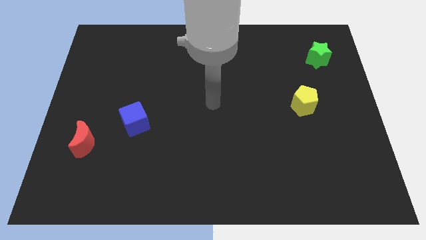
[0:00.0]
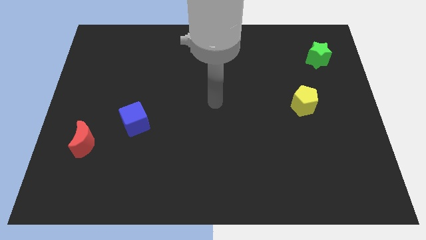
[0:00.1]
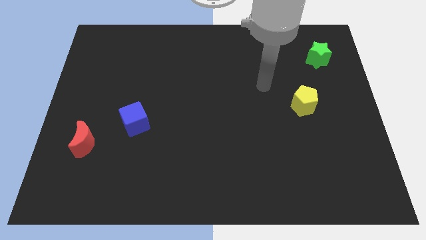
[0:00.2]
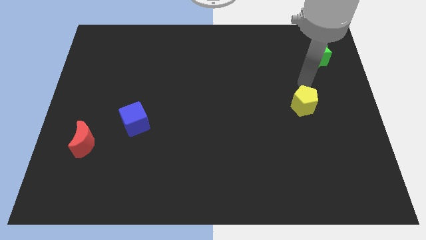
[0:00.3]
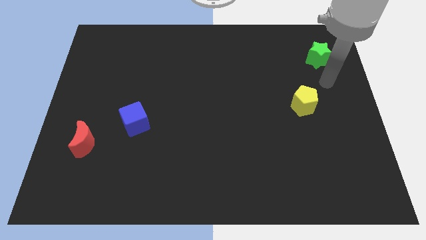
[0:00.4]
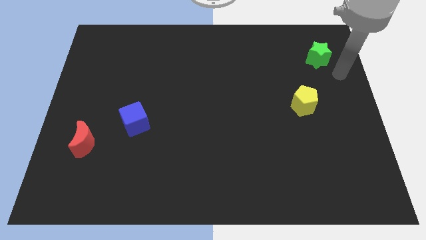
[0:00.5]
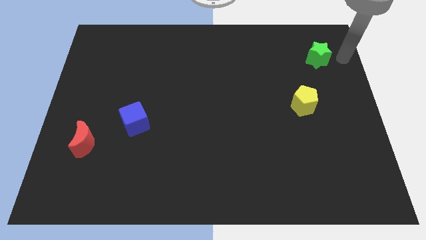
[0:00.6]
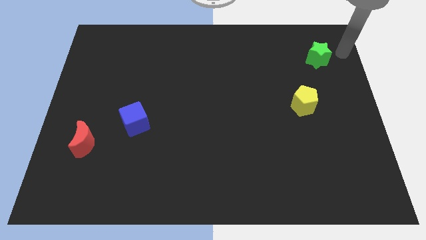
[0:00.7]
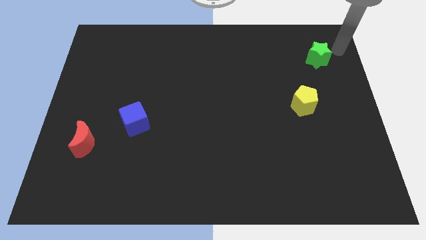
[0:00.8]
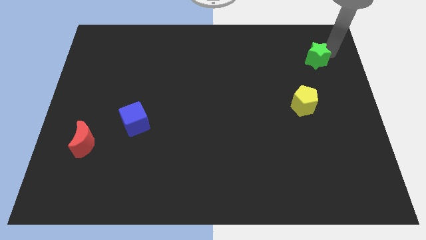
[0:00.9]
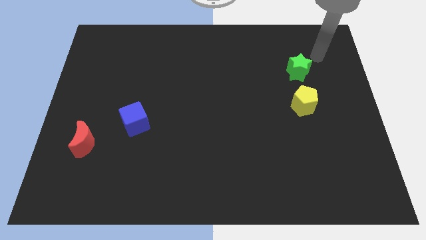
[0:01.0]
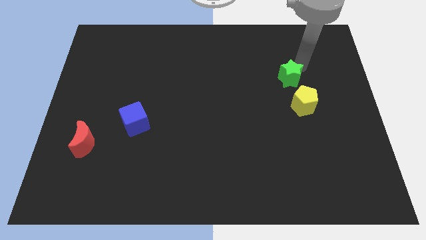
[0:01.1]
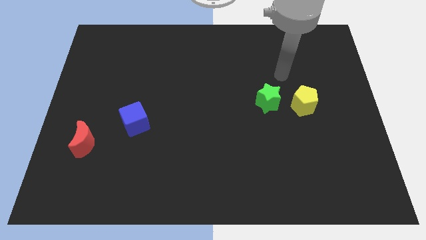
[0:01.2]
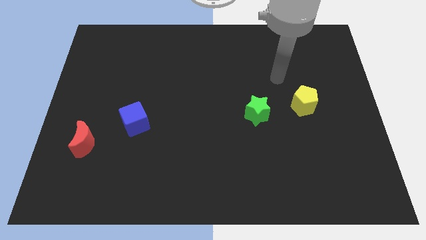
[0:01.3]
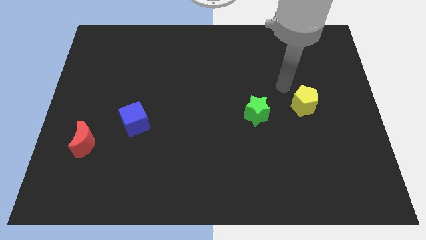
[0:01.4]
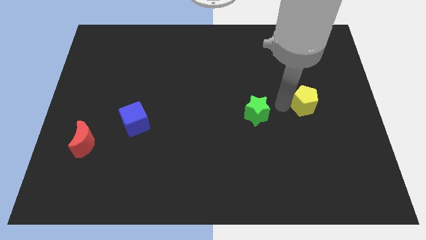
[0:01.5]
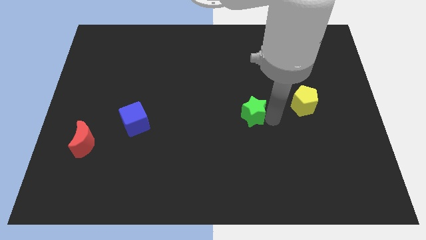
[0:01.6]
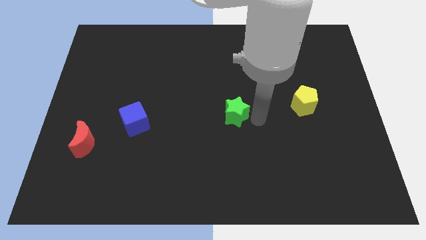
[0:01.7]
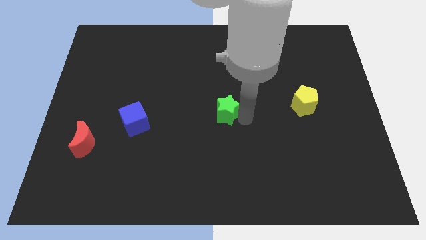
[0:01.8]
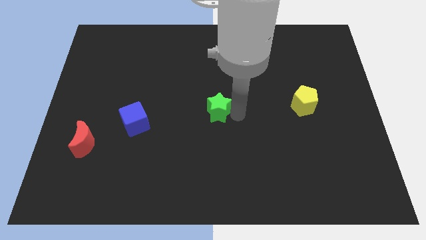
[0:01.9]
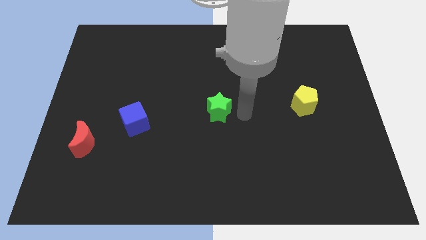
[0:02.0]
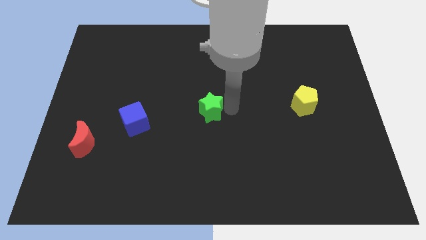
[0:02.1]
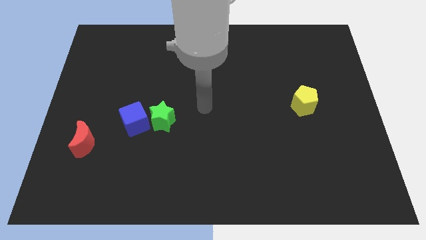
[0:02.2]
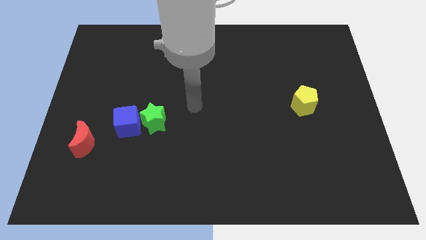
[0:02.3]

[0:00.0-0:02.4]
move the star next to the cube

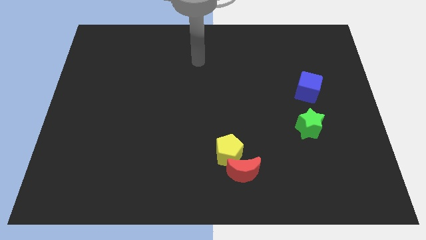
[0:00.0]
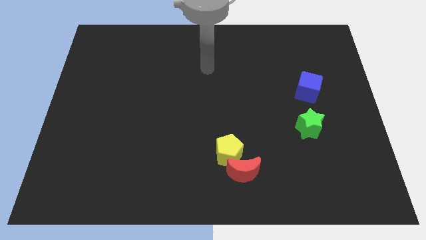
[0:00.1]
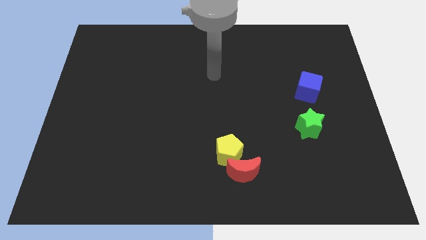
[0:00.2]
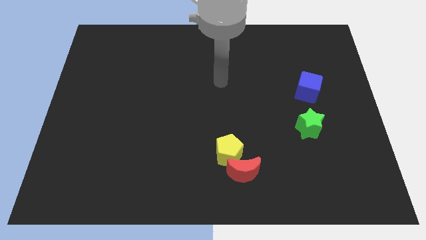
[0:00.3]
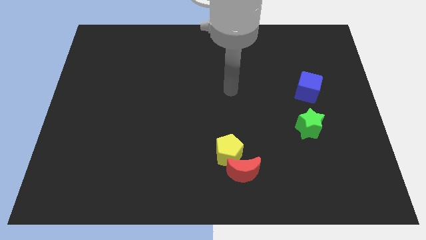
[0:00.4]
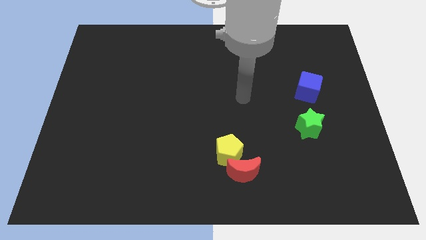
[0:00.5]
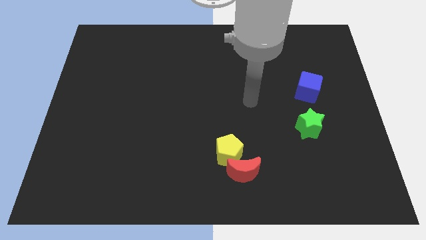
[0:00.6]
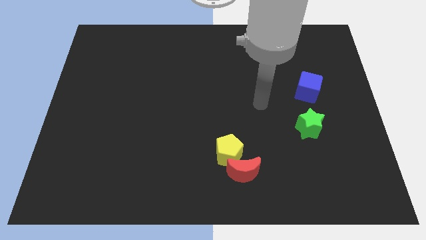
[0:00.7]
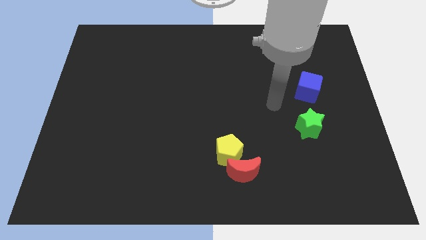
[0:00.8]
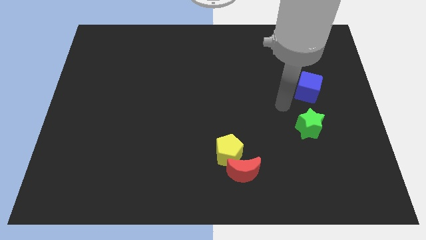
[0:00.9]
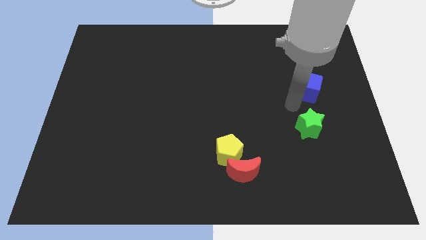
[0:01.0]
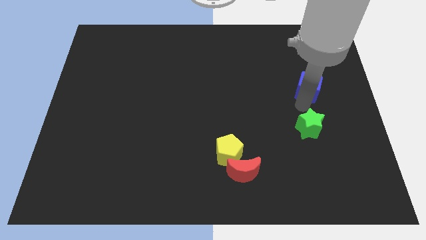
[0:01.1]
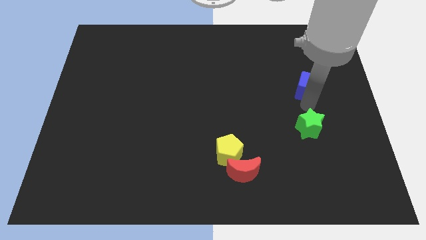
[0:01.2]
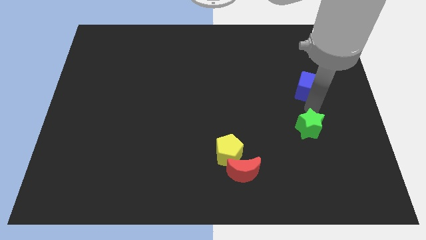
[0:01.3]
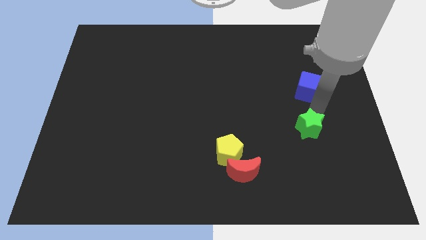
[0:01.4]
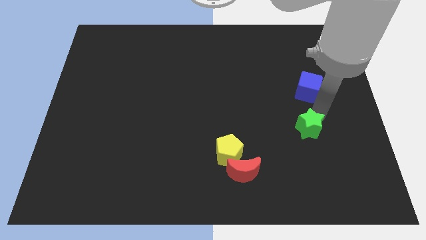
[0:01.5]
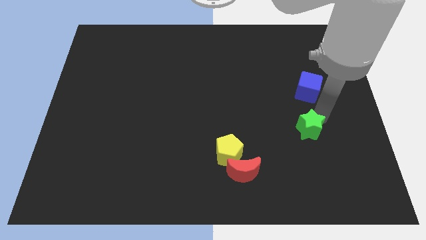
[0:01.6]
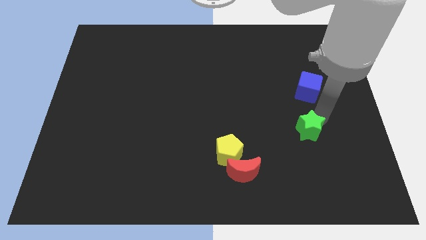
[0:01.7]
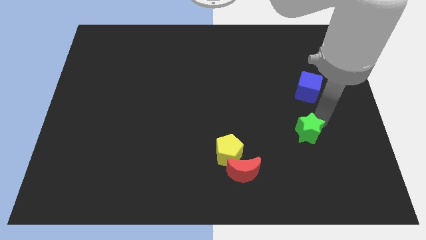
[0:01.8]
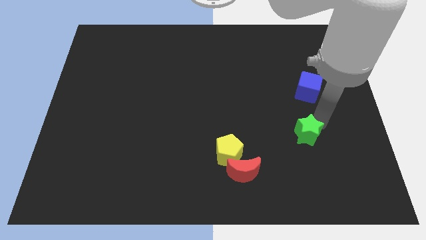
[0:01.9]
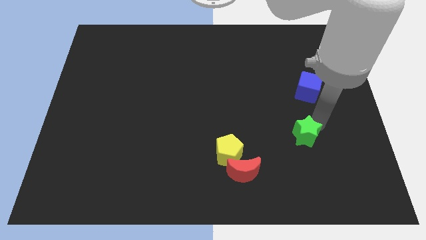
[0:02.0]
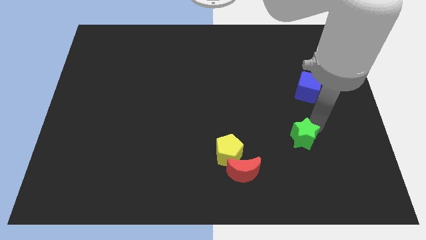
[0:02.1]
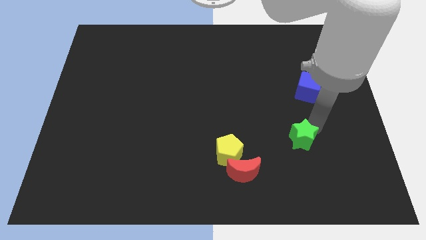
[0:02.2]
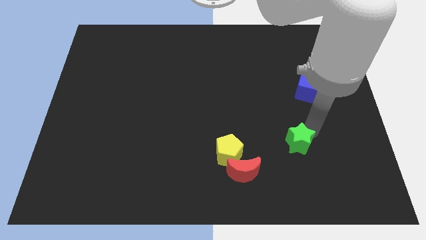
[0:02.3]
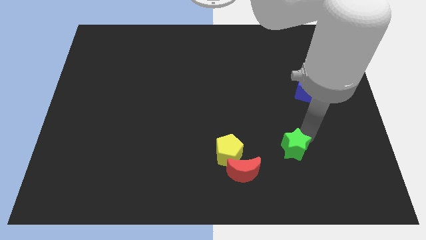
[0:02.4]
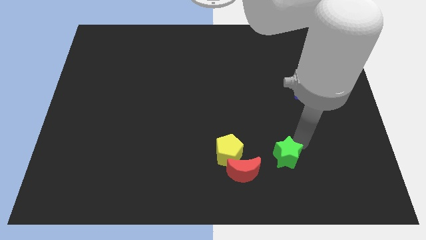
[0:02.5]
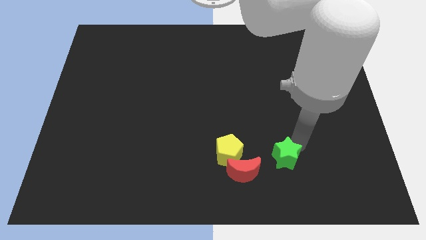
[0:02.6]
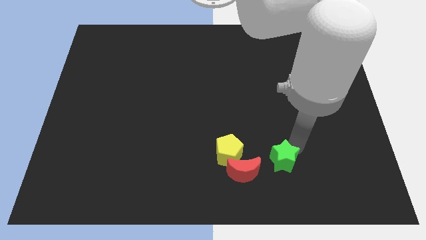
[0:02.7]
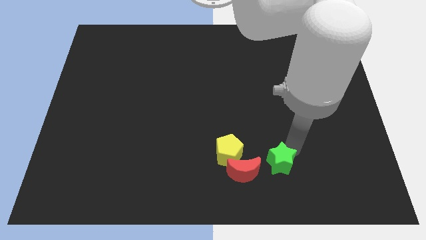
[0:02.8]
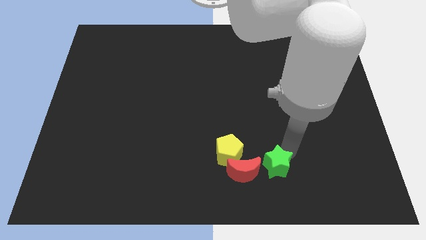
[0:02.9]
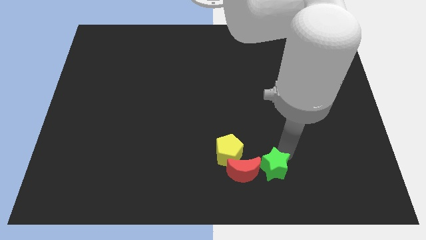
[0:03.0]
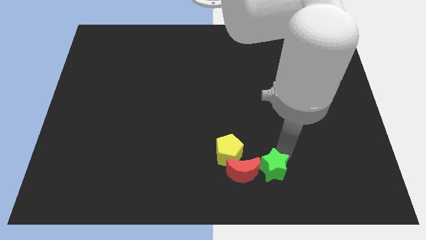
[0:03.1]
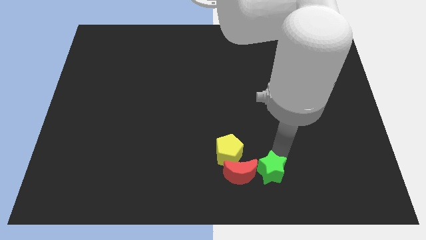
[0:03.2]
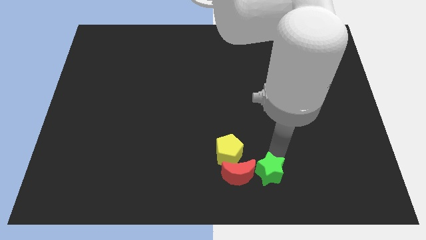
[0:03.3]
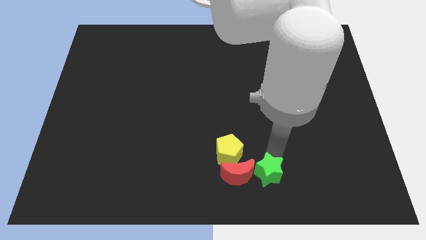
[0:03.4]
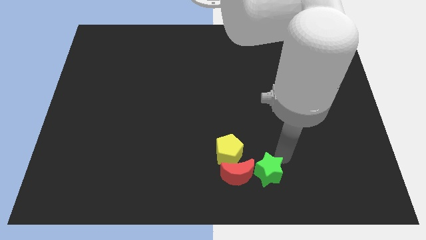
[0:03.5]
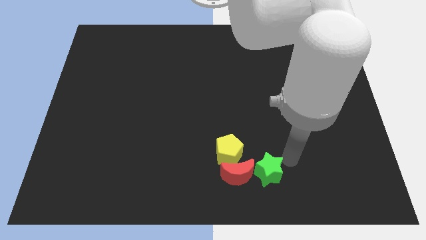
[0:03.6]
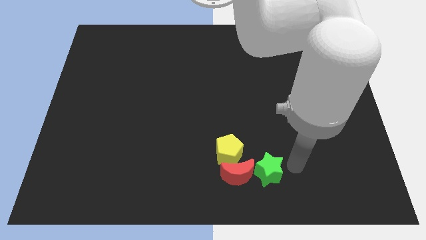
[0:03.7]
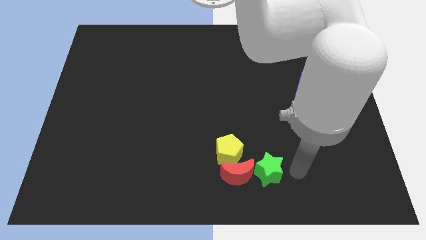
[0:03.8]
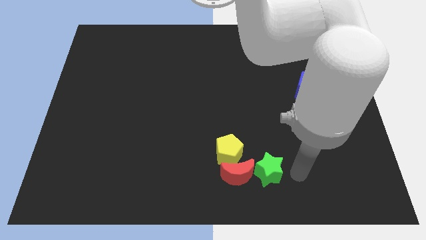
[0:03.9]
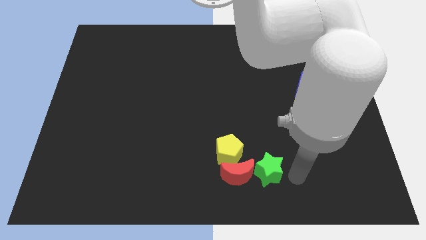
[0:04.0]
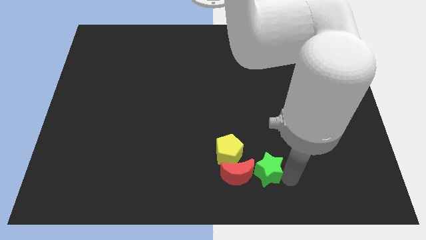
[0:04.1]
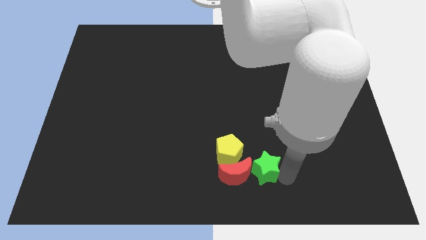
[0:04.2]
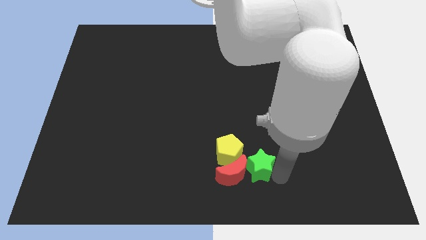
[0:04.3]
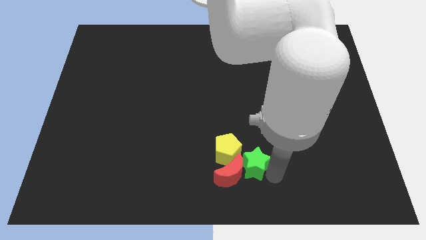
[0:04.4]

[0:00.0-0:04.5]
move the green star close to the red moon

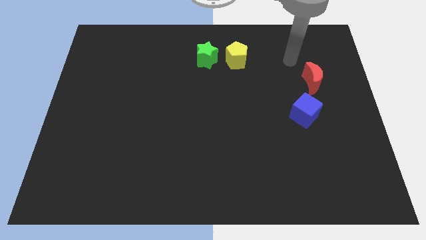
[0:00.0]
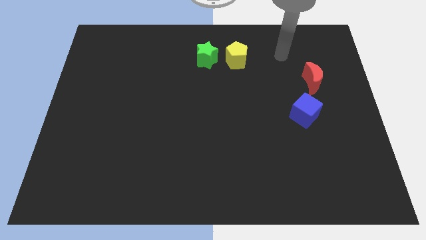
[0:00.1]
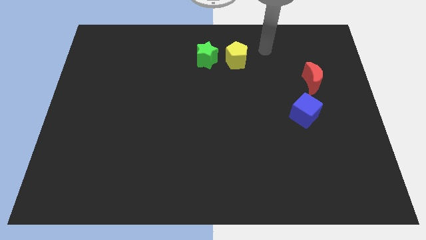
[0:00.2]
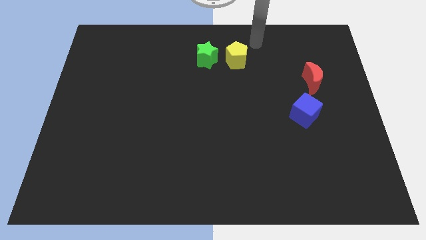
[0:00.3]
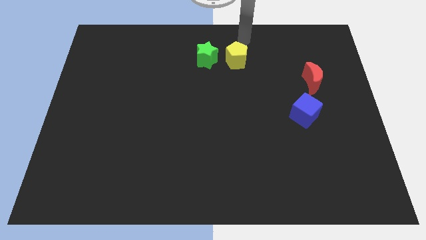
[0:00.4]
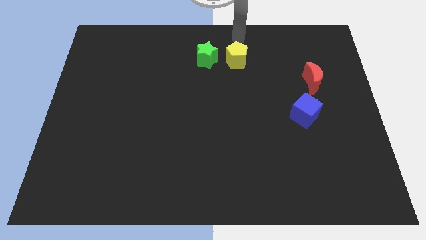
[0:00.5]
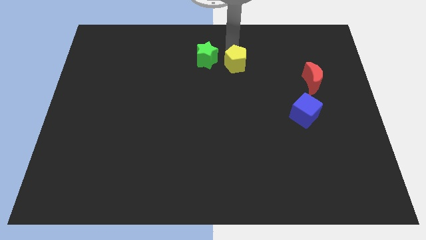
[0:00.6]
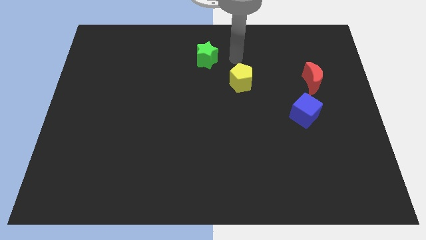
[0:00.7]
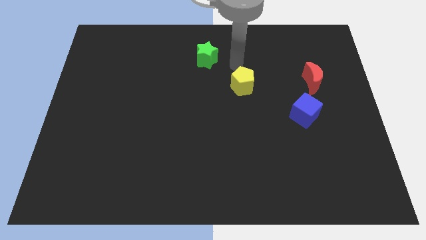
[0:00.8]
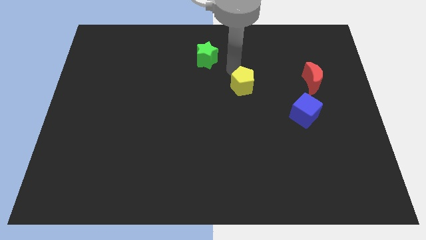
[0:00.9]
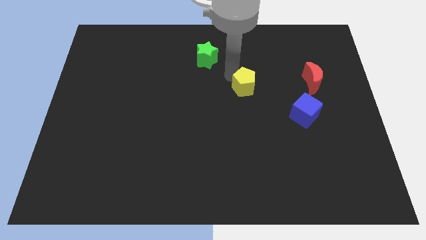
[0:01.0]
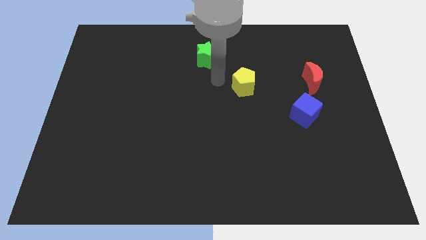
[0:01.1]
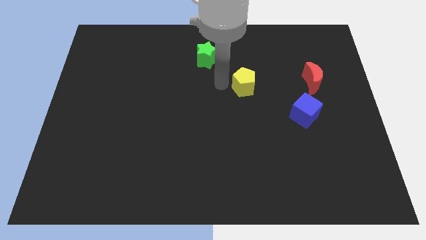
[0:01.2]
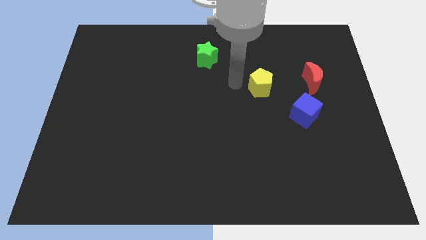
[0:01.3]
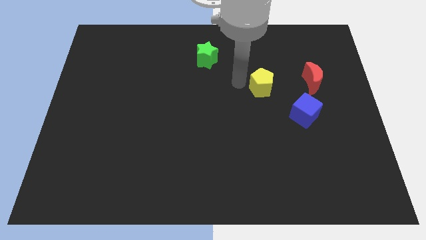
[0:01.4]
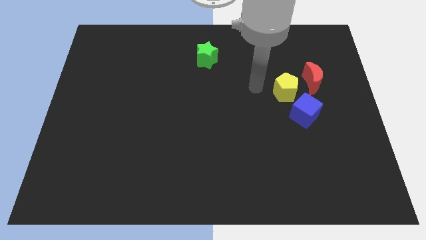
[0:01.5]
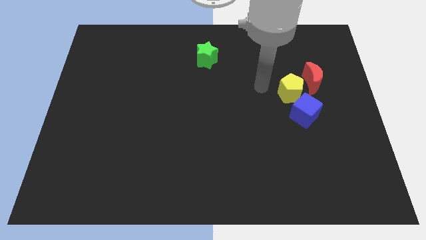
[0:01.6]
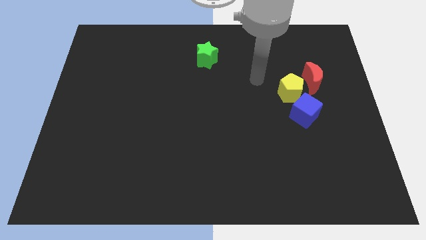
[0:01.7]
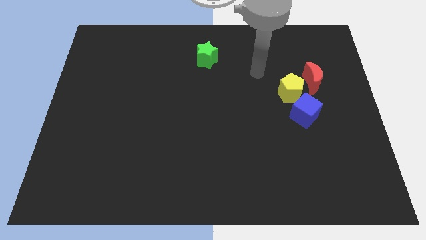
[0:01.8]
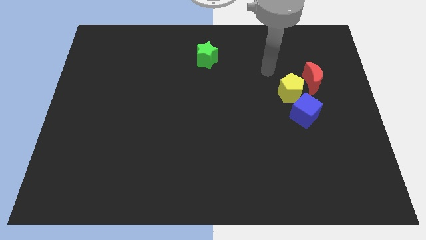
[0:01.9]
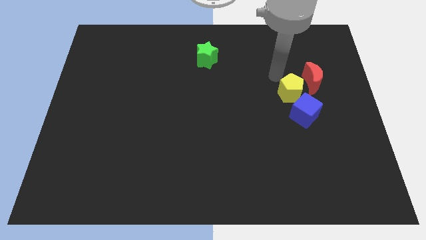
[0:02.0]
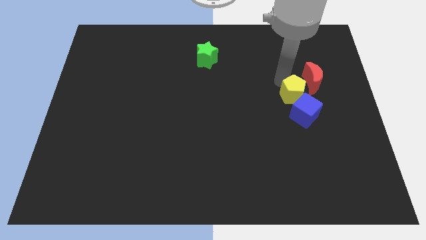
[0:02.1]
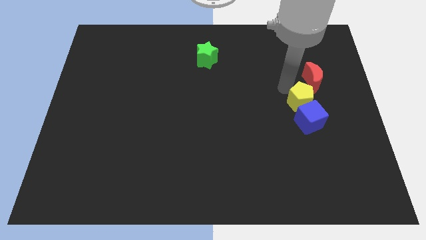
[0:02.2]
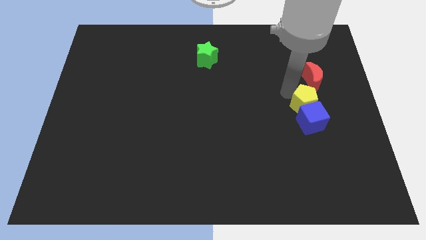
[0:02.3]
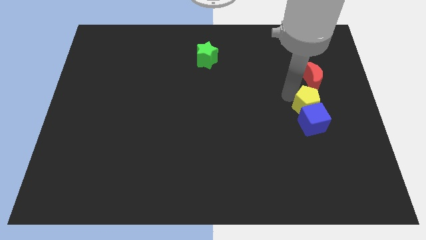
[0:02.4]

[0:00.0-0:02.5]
put the yellow block next to the blue cube
